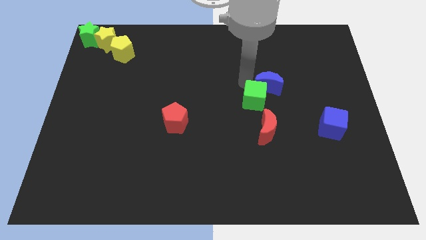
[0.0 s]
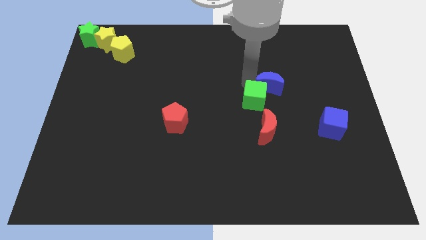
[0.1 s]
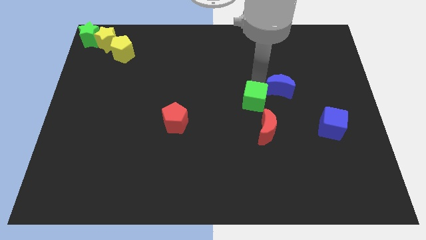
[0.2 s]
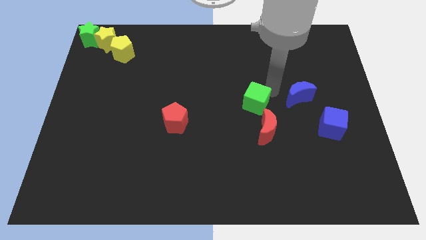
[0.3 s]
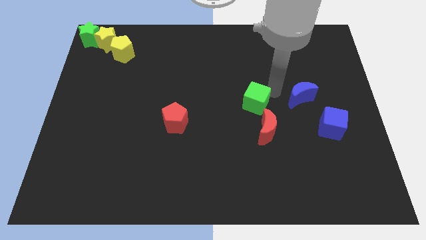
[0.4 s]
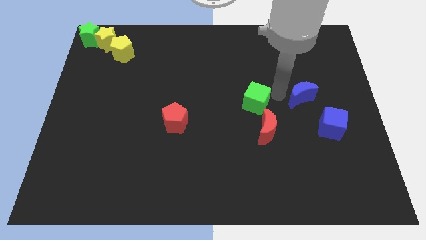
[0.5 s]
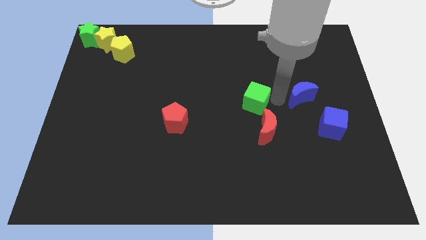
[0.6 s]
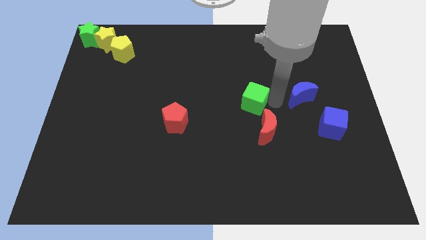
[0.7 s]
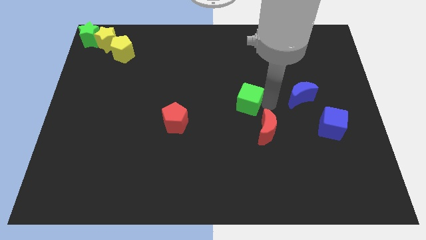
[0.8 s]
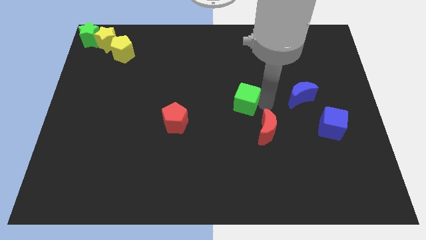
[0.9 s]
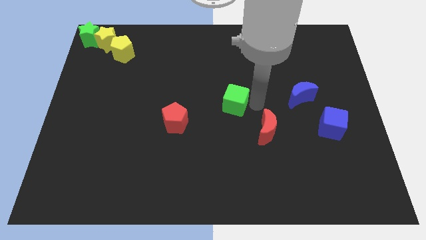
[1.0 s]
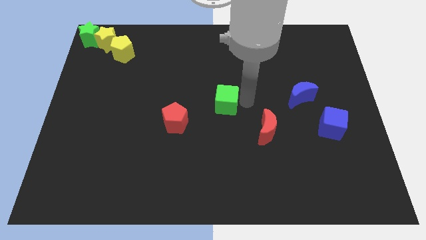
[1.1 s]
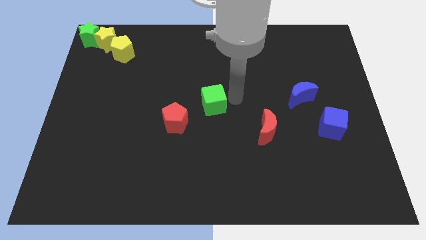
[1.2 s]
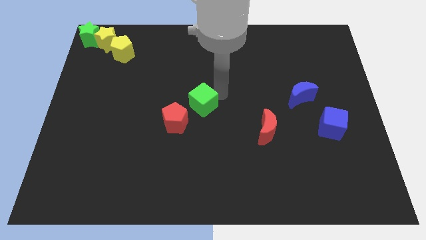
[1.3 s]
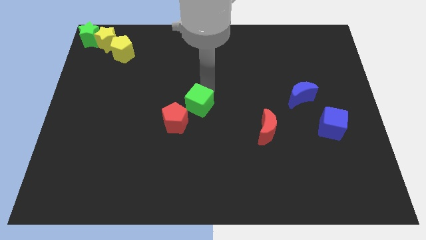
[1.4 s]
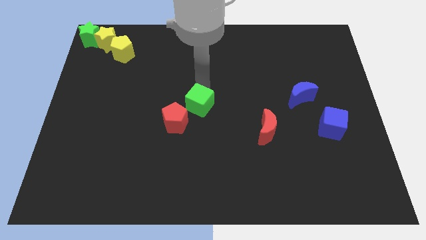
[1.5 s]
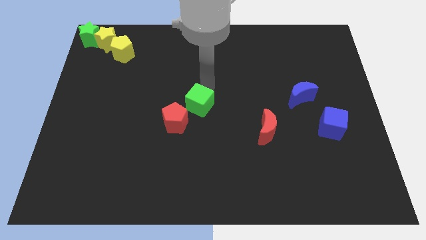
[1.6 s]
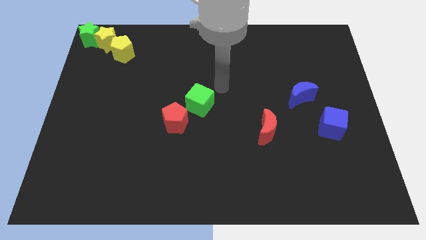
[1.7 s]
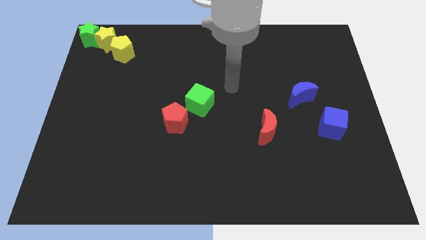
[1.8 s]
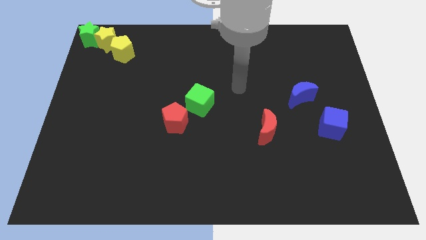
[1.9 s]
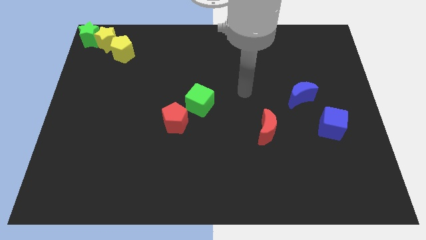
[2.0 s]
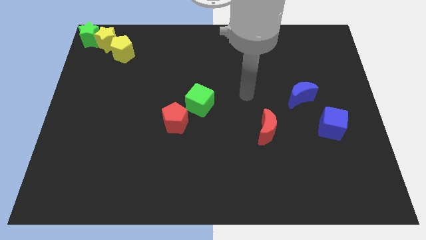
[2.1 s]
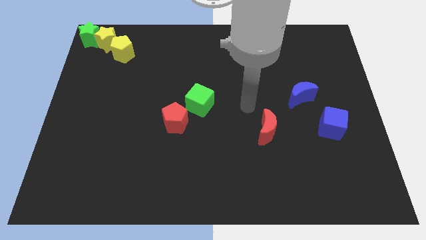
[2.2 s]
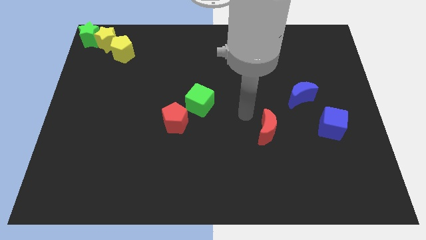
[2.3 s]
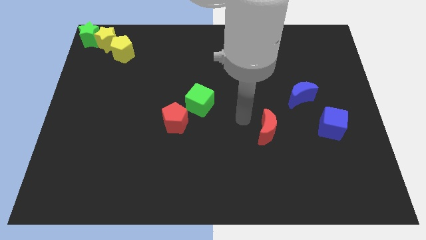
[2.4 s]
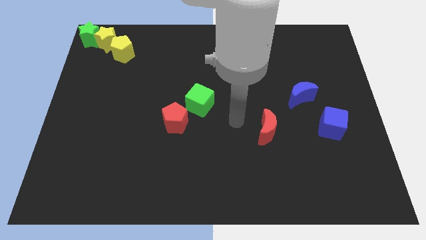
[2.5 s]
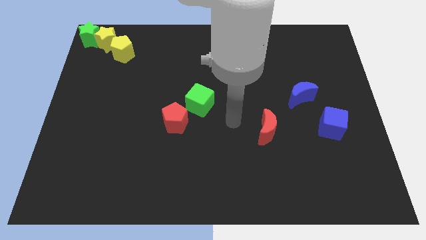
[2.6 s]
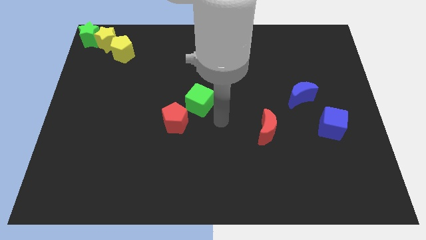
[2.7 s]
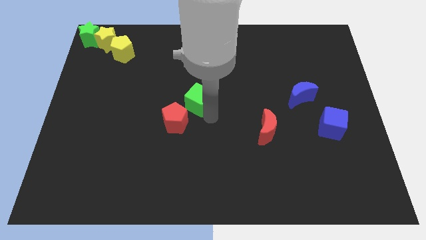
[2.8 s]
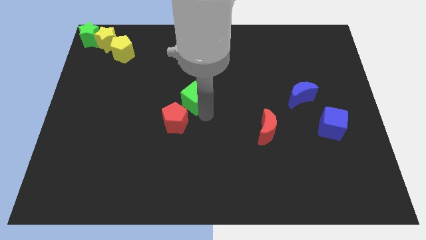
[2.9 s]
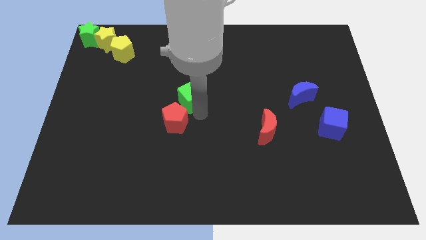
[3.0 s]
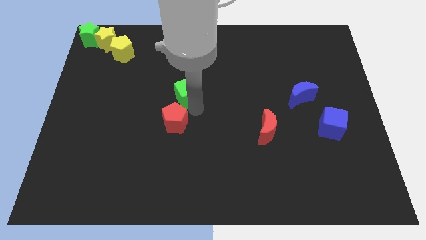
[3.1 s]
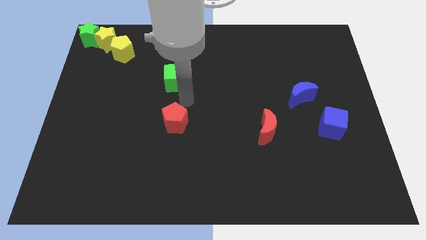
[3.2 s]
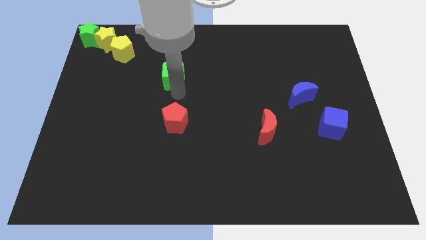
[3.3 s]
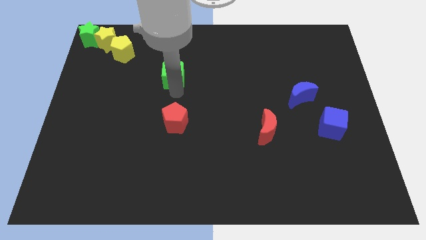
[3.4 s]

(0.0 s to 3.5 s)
place the green cube on top of the red pentagon

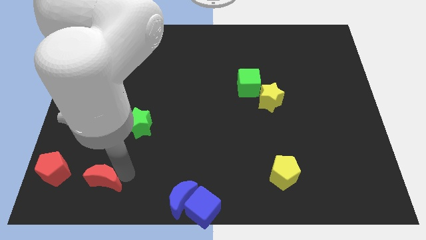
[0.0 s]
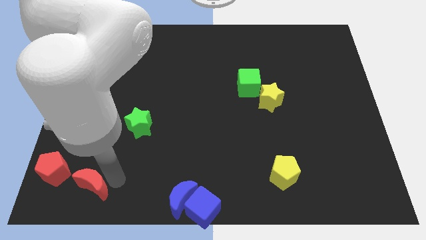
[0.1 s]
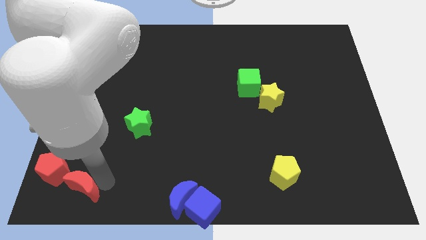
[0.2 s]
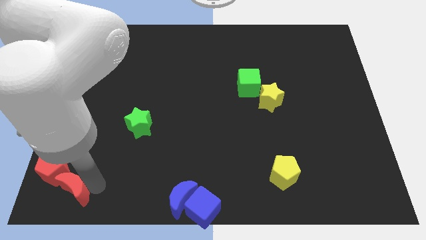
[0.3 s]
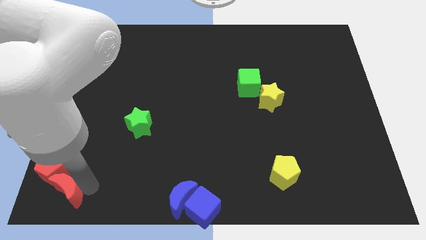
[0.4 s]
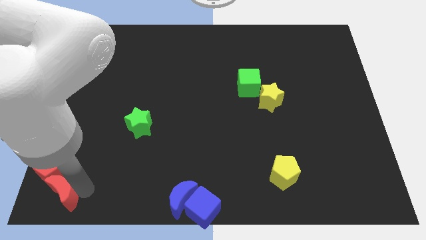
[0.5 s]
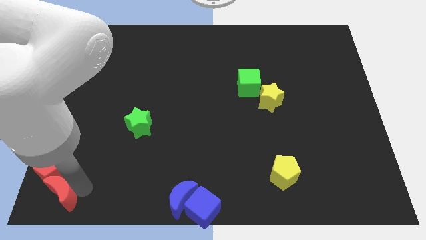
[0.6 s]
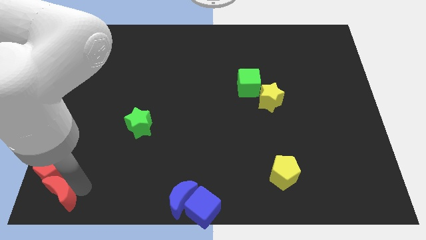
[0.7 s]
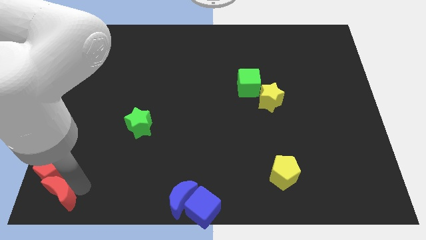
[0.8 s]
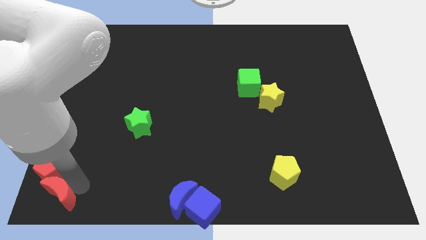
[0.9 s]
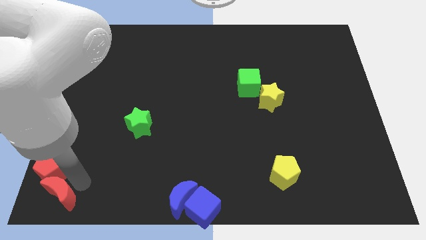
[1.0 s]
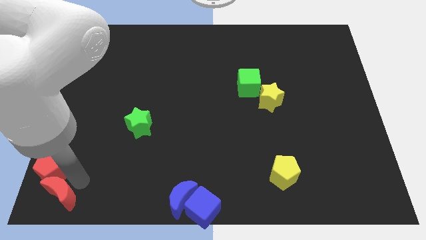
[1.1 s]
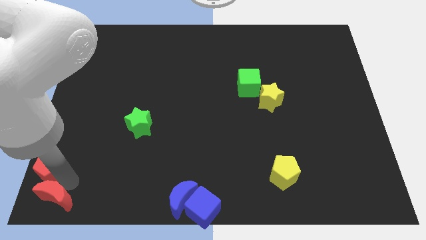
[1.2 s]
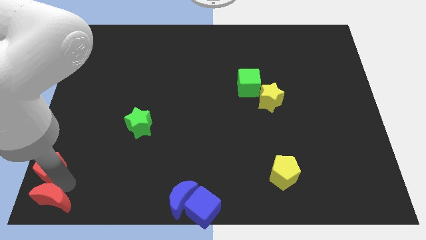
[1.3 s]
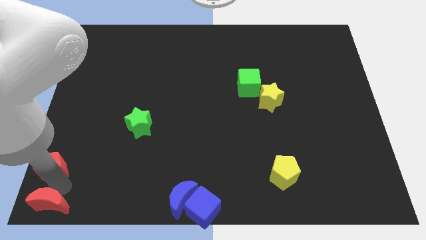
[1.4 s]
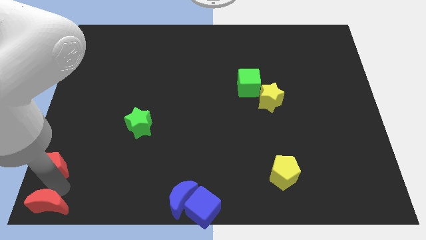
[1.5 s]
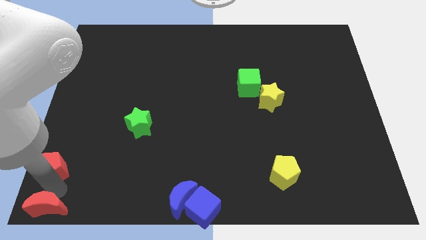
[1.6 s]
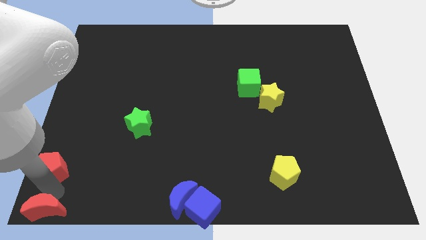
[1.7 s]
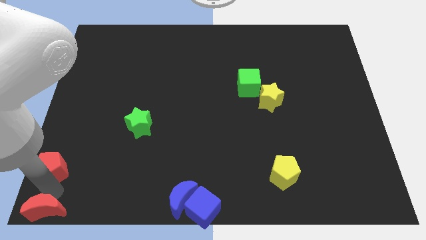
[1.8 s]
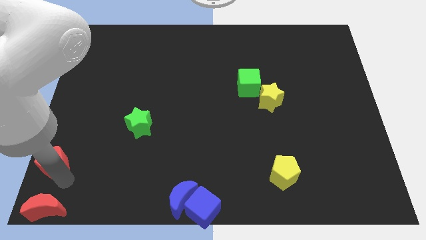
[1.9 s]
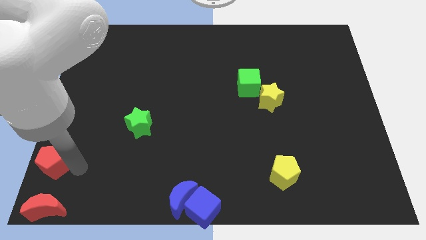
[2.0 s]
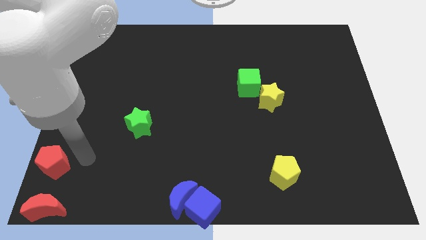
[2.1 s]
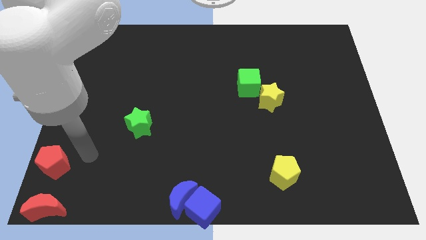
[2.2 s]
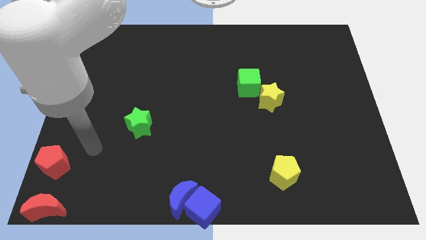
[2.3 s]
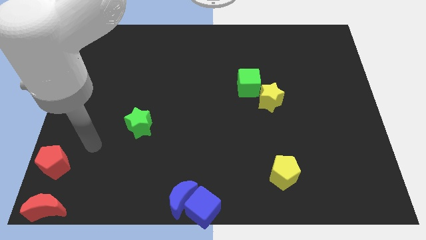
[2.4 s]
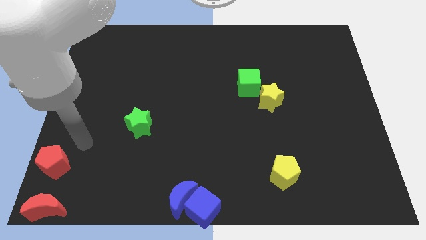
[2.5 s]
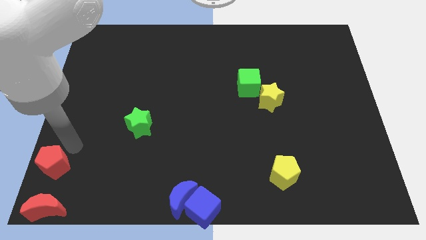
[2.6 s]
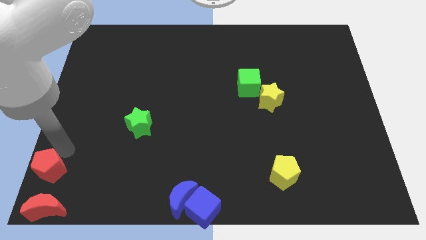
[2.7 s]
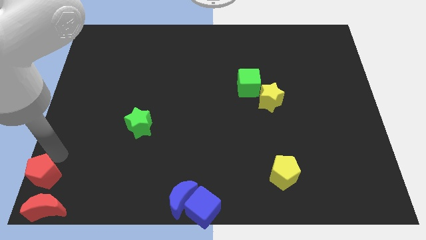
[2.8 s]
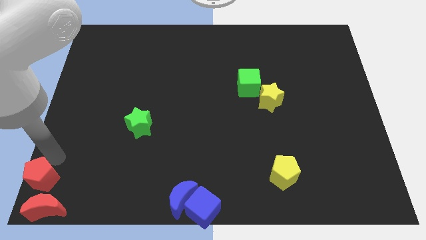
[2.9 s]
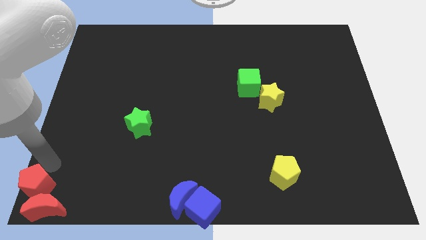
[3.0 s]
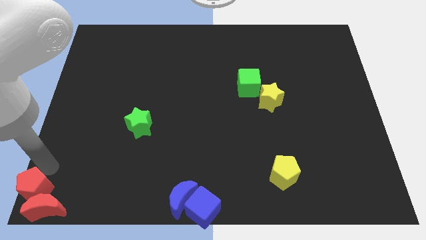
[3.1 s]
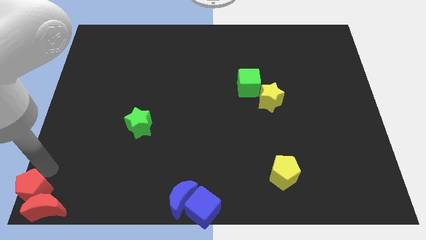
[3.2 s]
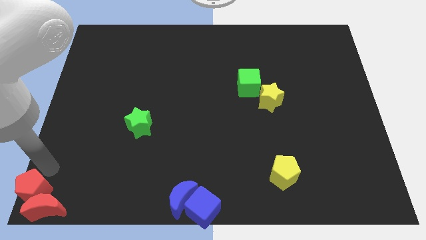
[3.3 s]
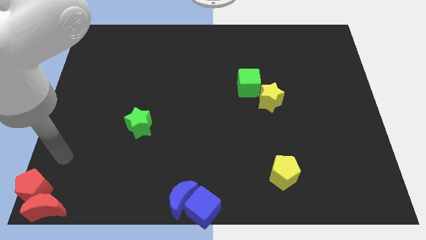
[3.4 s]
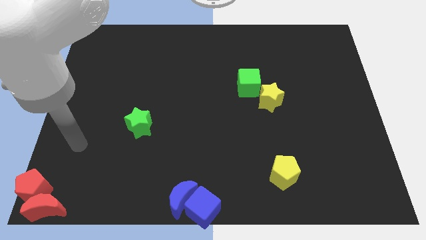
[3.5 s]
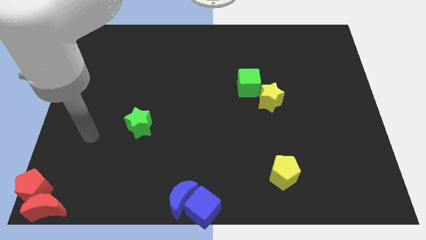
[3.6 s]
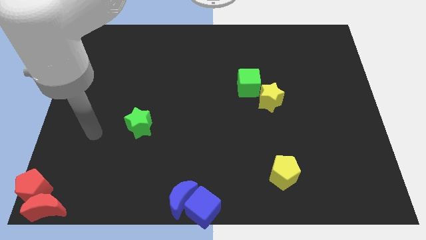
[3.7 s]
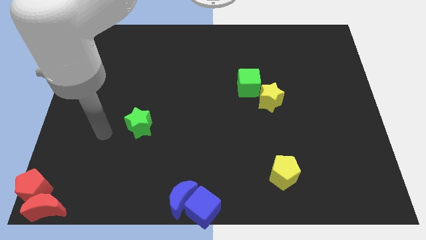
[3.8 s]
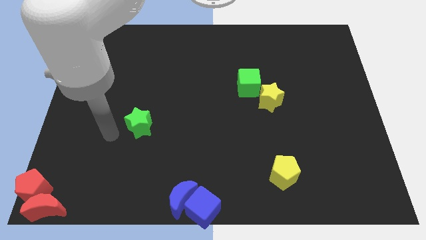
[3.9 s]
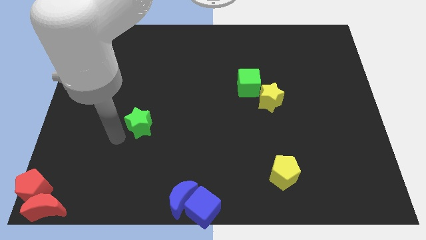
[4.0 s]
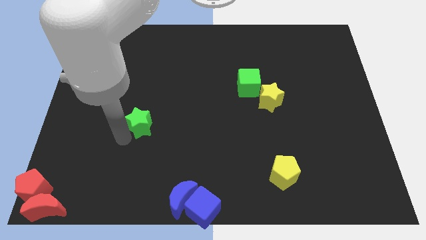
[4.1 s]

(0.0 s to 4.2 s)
push the red pentagon and red crescent towards the bottom left corner of the board

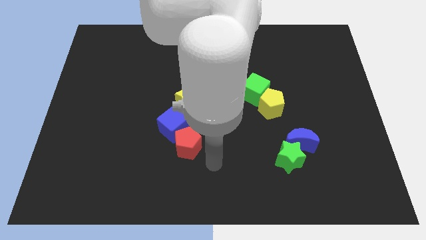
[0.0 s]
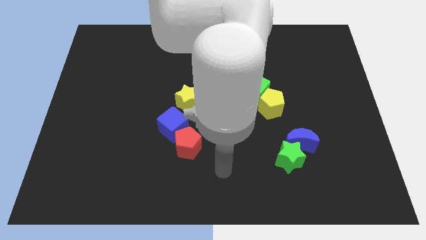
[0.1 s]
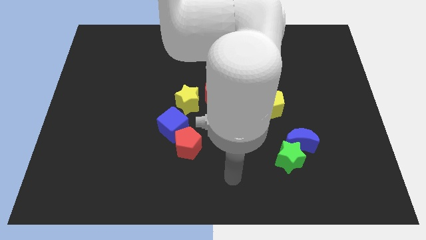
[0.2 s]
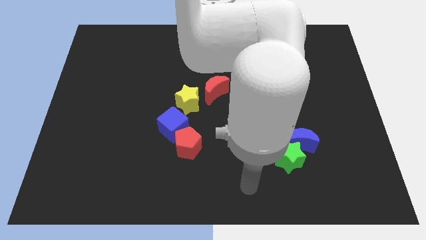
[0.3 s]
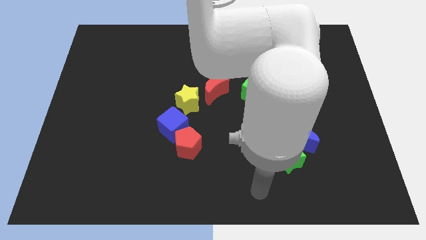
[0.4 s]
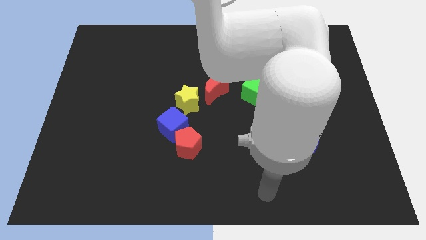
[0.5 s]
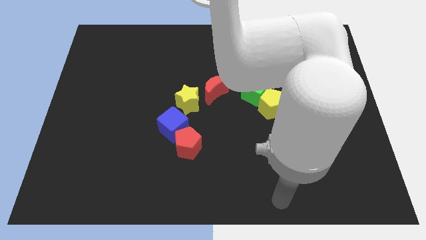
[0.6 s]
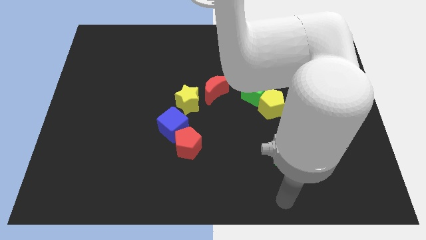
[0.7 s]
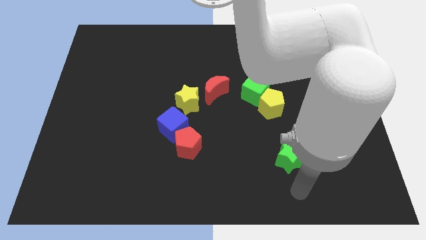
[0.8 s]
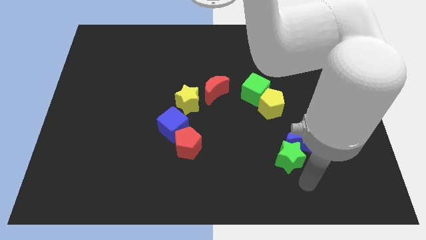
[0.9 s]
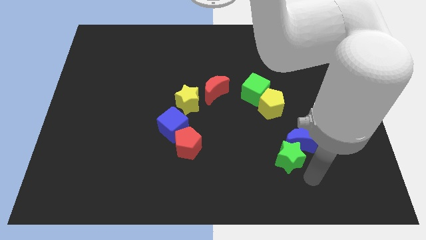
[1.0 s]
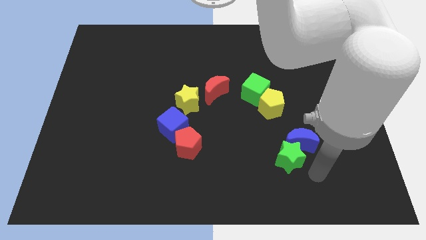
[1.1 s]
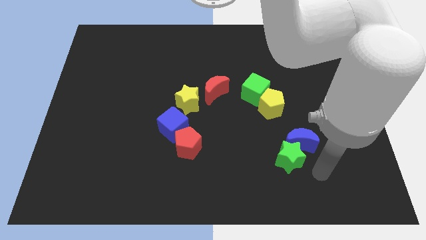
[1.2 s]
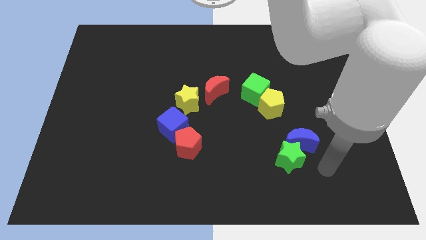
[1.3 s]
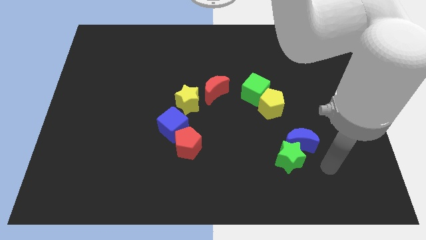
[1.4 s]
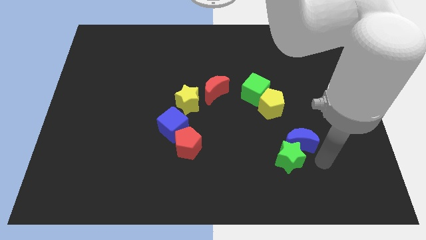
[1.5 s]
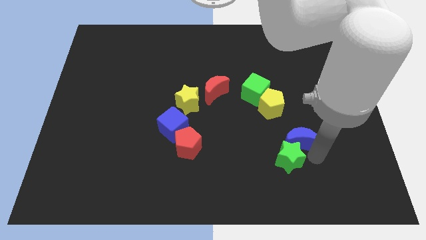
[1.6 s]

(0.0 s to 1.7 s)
point your arm at the right of the green star
